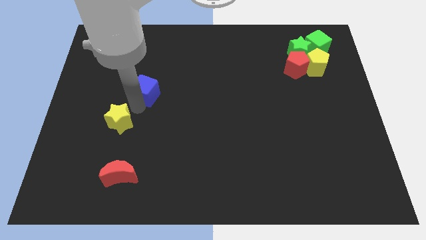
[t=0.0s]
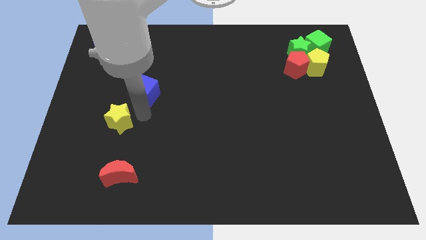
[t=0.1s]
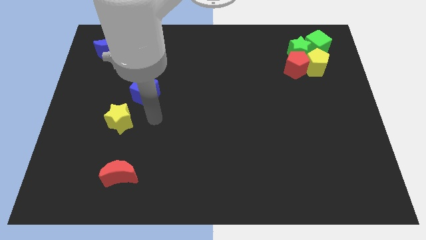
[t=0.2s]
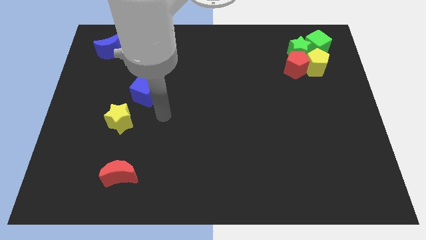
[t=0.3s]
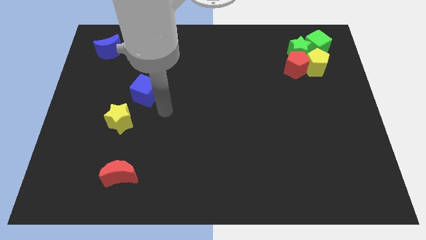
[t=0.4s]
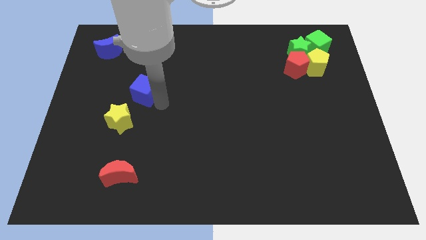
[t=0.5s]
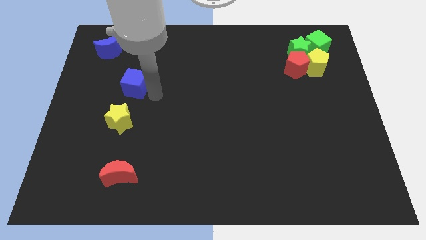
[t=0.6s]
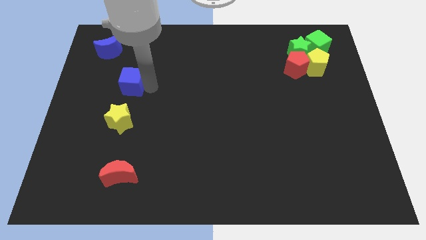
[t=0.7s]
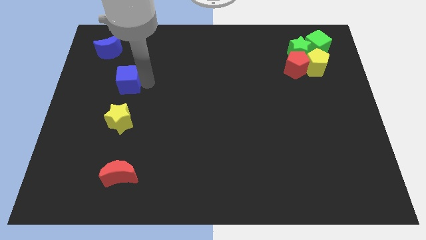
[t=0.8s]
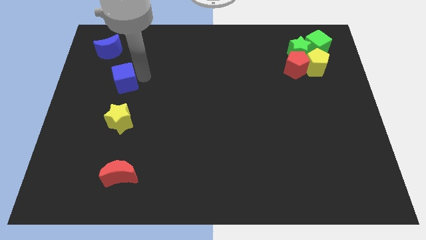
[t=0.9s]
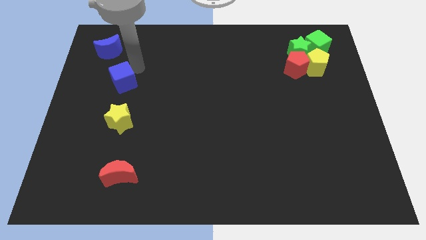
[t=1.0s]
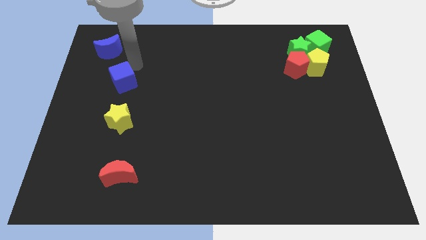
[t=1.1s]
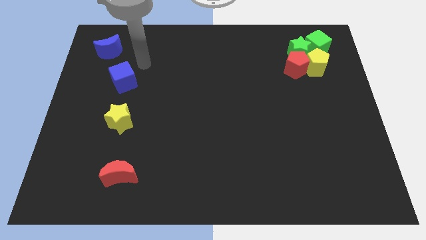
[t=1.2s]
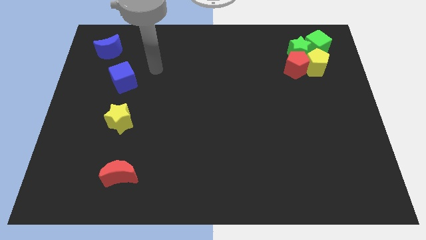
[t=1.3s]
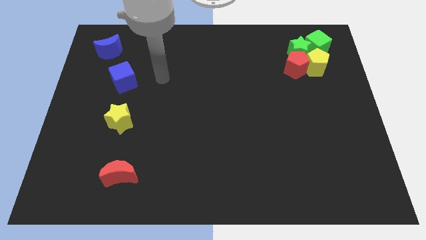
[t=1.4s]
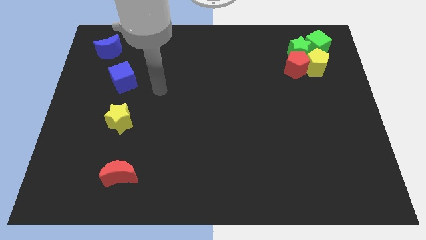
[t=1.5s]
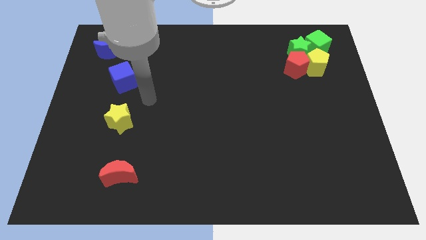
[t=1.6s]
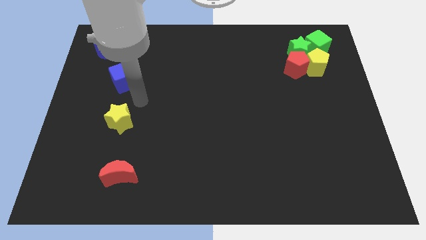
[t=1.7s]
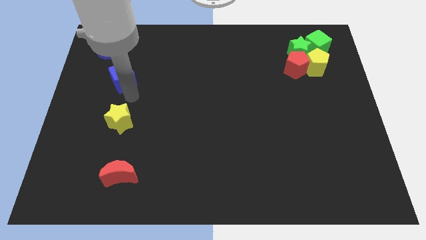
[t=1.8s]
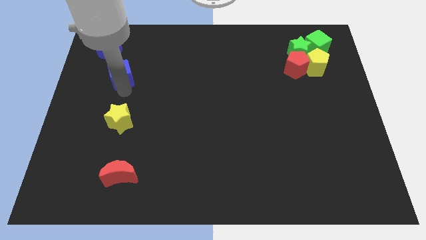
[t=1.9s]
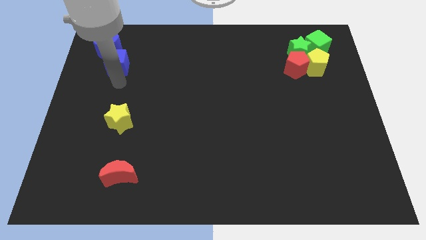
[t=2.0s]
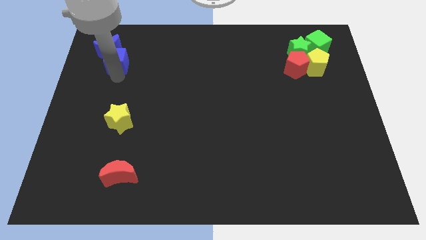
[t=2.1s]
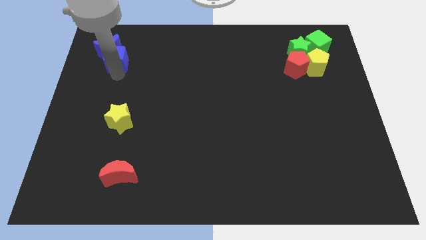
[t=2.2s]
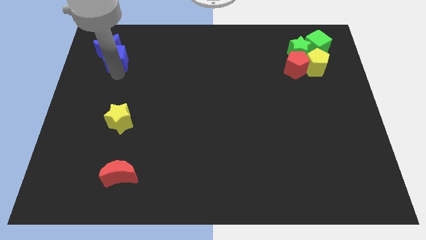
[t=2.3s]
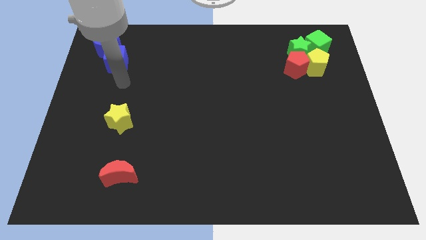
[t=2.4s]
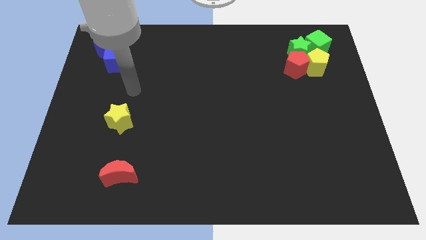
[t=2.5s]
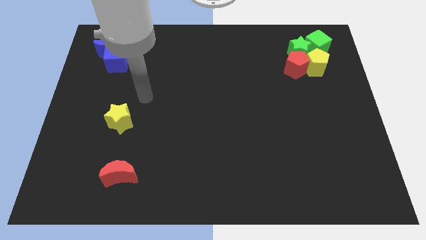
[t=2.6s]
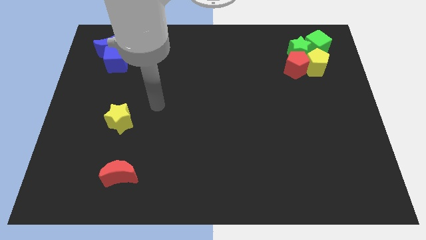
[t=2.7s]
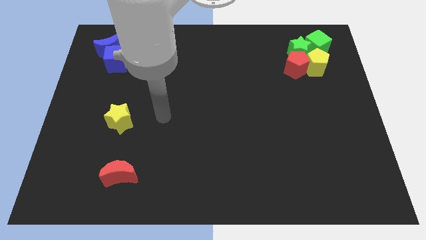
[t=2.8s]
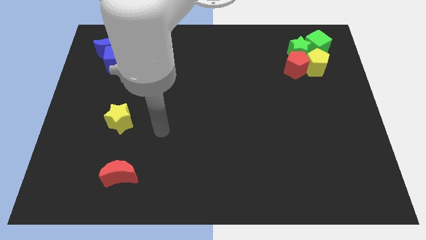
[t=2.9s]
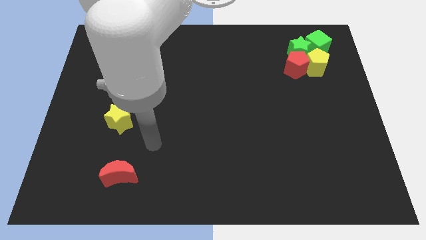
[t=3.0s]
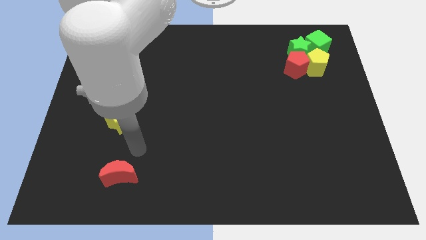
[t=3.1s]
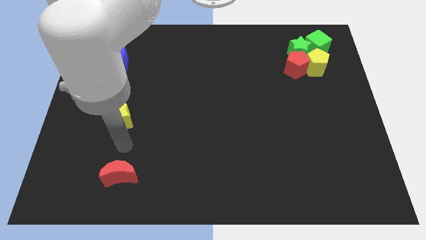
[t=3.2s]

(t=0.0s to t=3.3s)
push the blue cube close to the blue moon

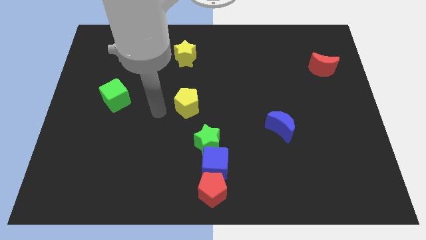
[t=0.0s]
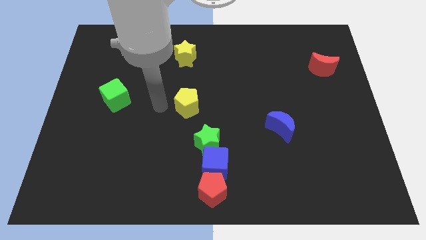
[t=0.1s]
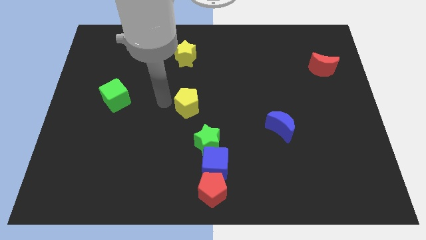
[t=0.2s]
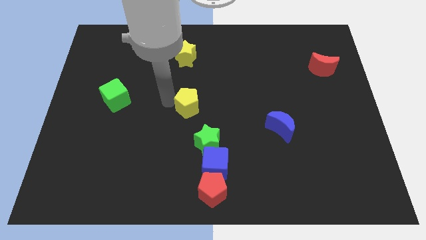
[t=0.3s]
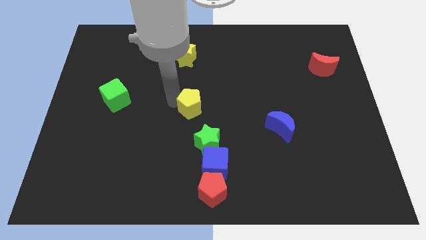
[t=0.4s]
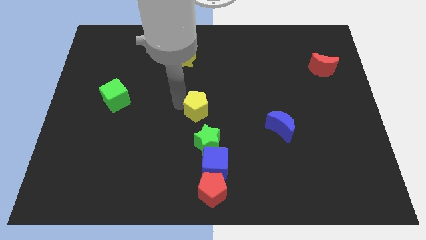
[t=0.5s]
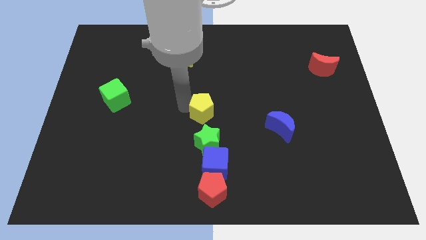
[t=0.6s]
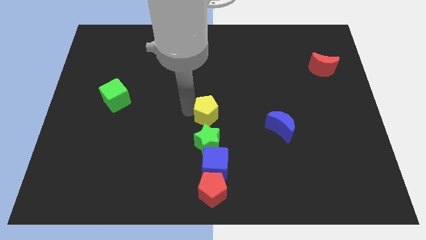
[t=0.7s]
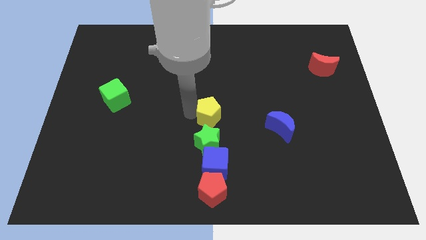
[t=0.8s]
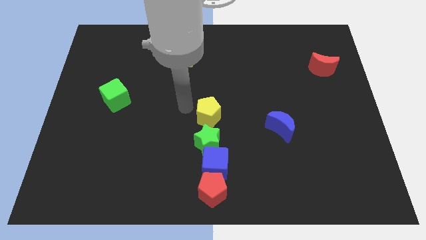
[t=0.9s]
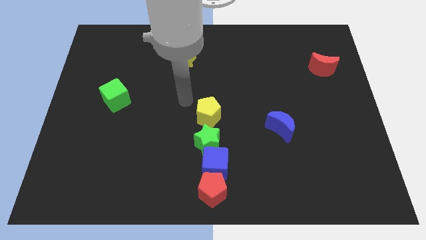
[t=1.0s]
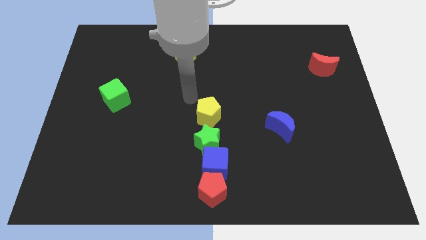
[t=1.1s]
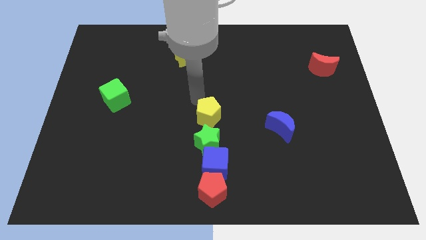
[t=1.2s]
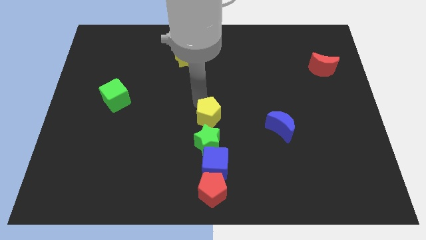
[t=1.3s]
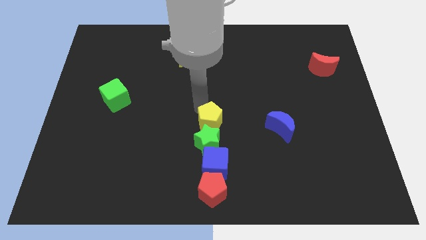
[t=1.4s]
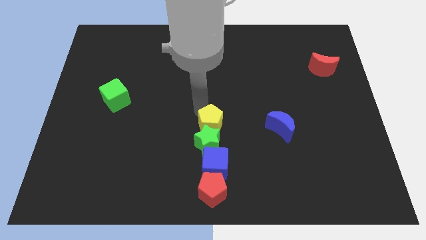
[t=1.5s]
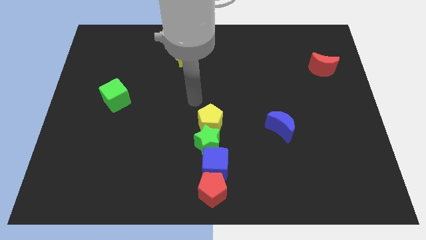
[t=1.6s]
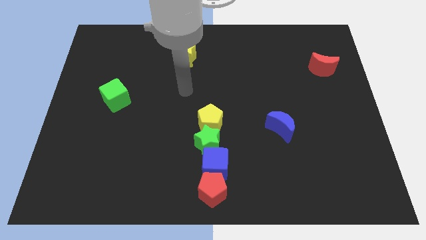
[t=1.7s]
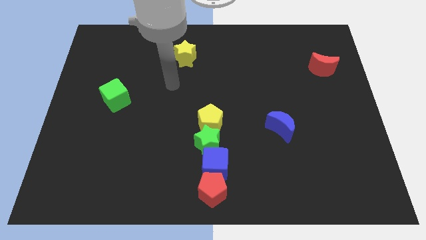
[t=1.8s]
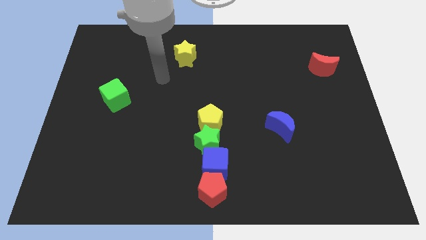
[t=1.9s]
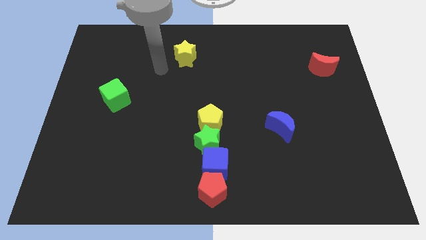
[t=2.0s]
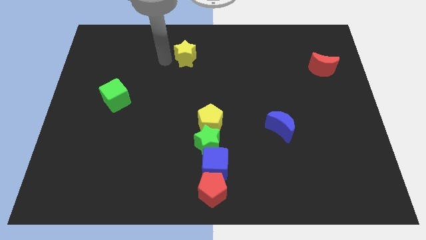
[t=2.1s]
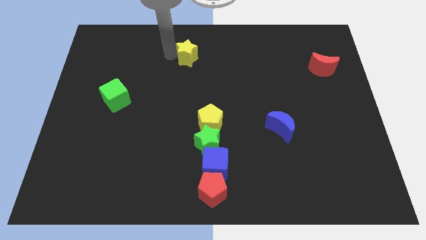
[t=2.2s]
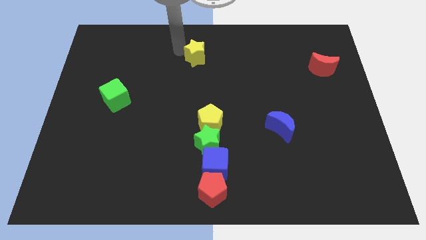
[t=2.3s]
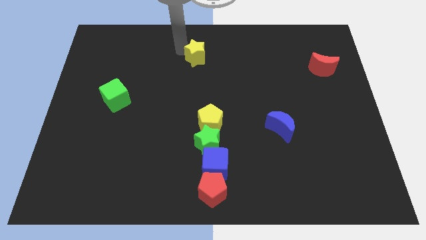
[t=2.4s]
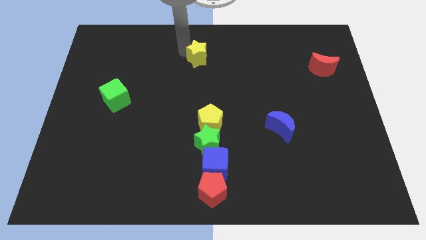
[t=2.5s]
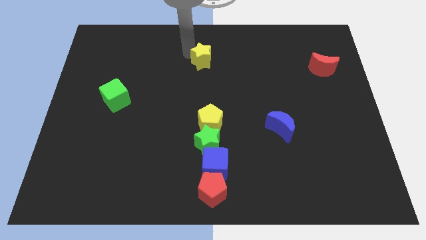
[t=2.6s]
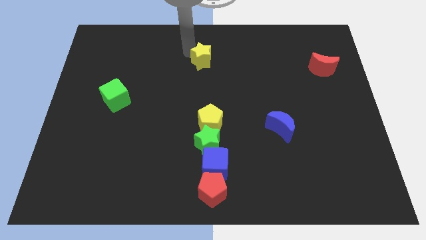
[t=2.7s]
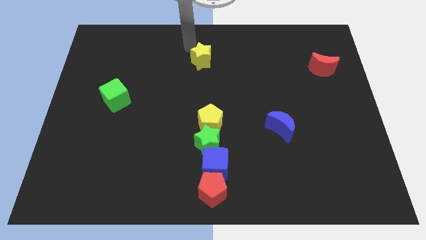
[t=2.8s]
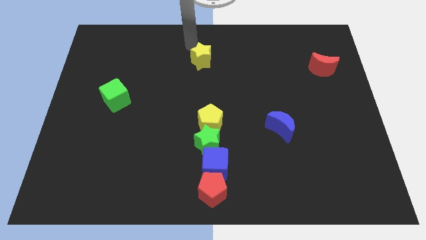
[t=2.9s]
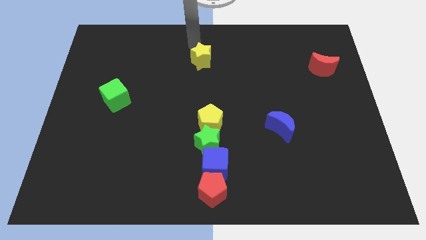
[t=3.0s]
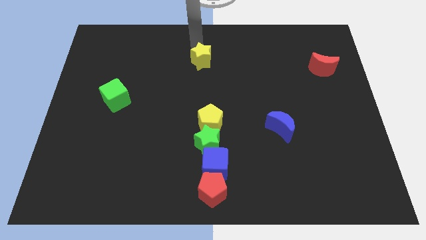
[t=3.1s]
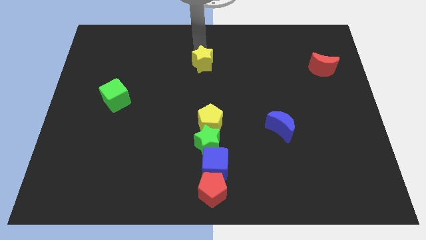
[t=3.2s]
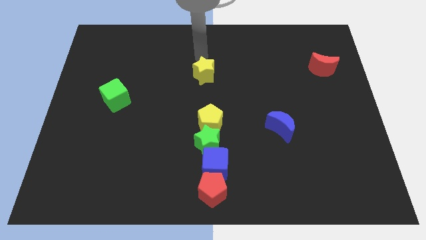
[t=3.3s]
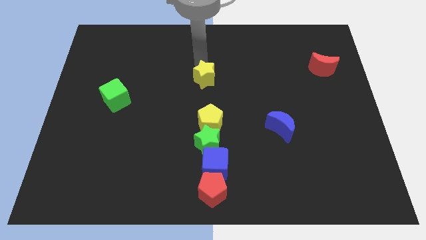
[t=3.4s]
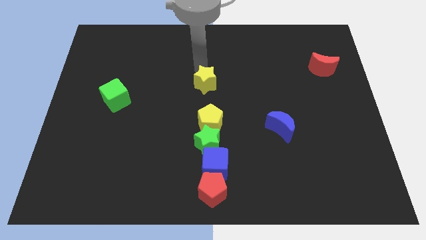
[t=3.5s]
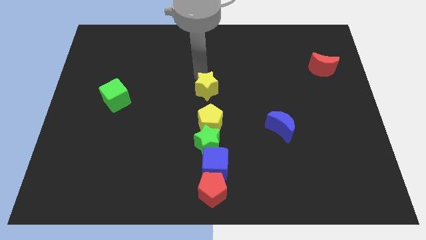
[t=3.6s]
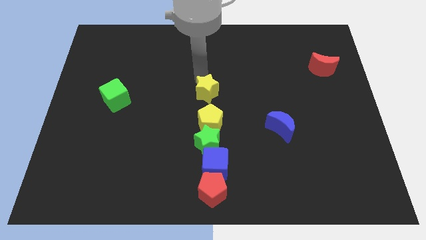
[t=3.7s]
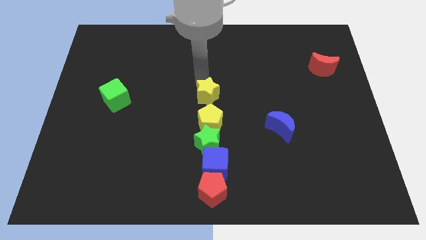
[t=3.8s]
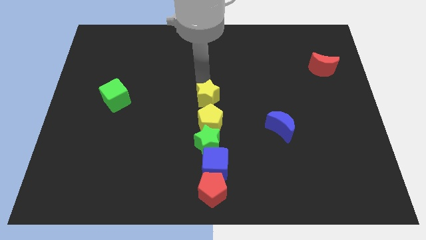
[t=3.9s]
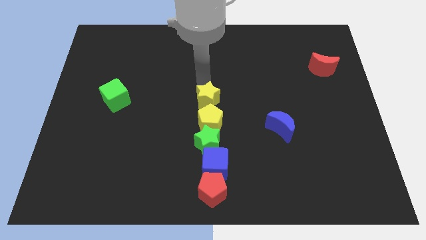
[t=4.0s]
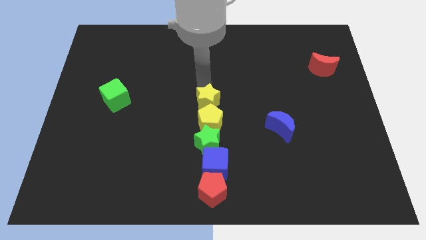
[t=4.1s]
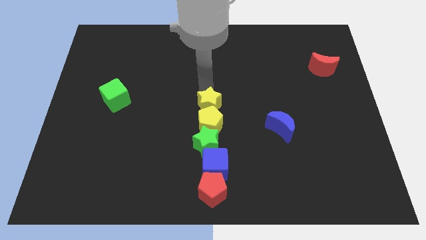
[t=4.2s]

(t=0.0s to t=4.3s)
place both the yellow blocks at the top side of the green star

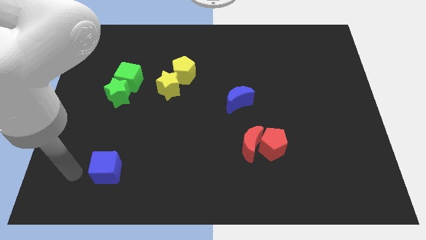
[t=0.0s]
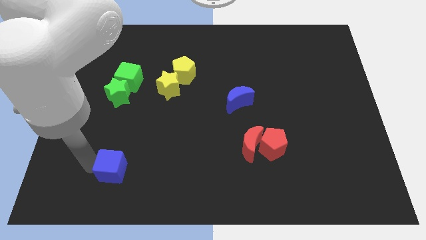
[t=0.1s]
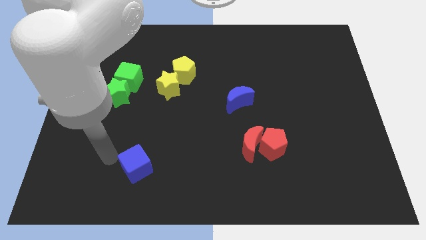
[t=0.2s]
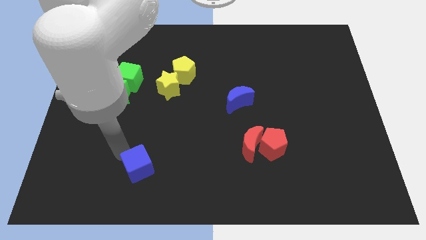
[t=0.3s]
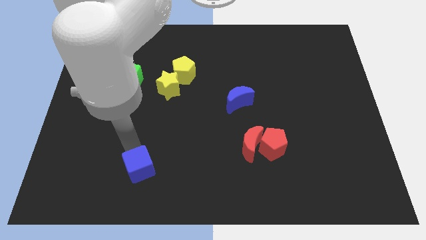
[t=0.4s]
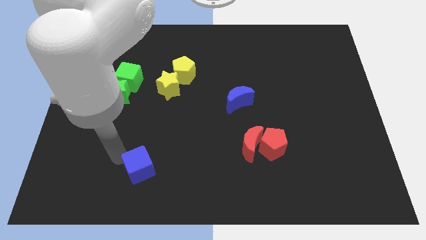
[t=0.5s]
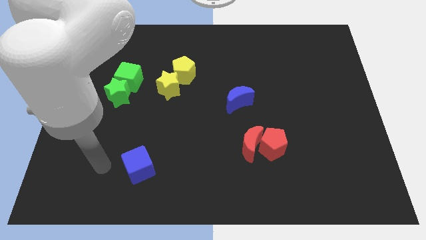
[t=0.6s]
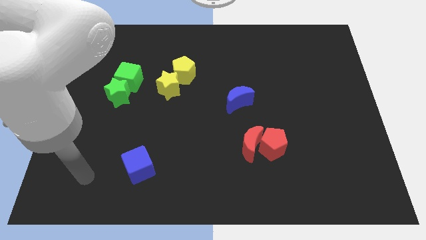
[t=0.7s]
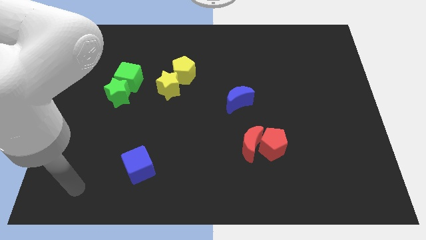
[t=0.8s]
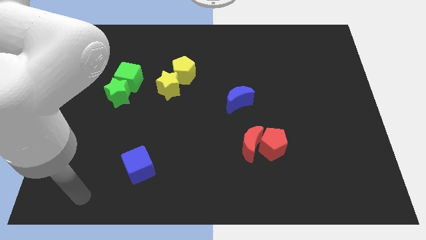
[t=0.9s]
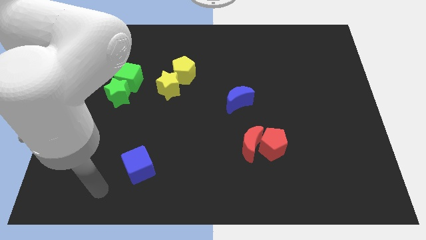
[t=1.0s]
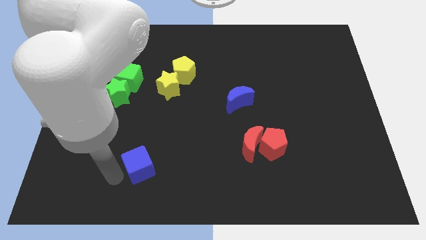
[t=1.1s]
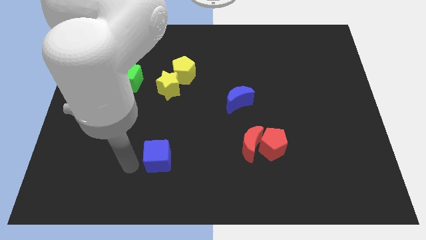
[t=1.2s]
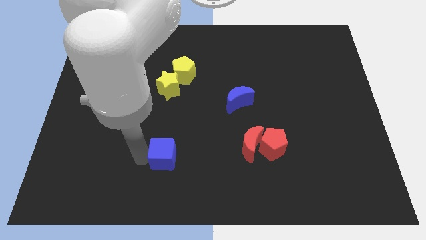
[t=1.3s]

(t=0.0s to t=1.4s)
slightly move the blue cube to the right of the board
